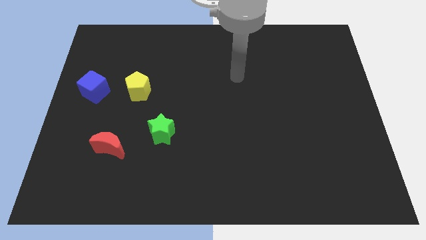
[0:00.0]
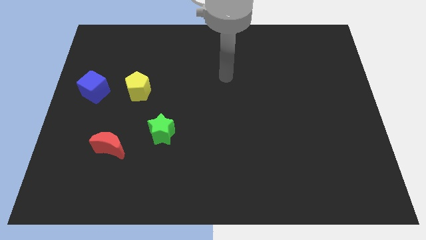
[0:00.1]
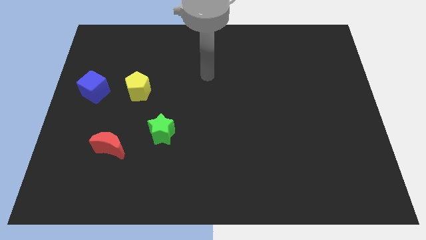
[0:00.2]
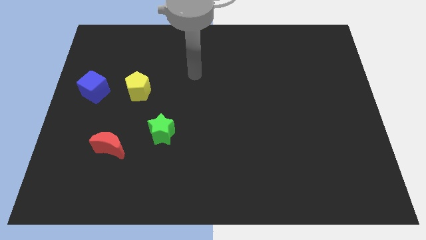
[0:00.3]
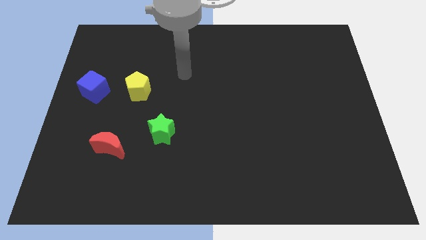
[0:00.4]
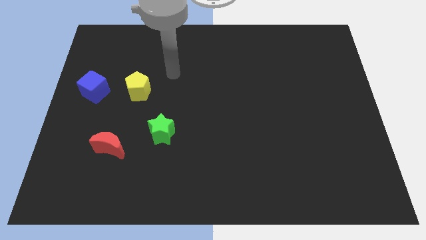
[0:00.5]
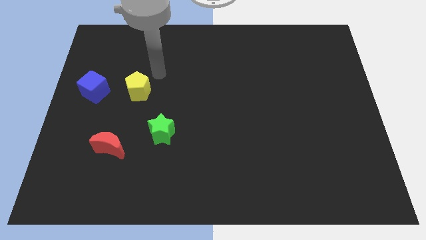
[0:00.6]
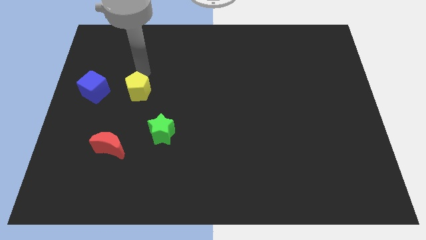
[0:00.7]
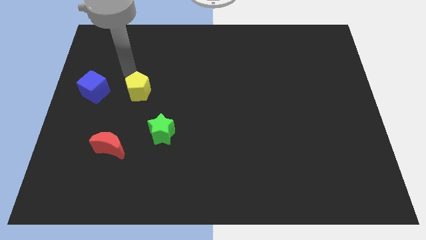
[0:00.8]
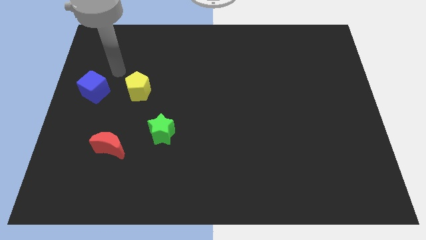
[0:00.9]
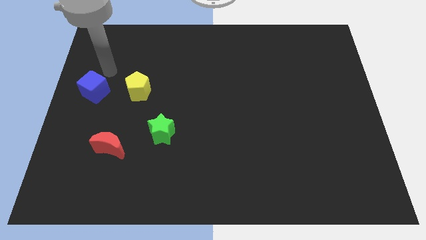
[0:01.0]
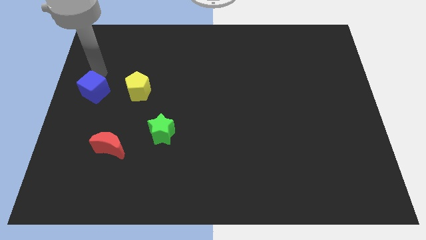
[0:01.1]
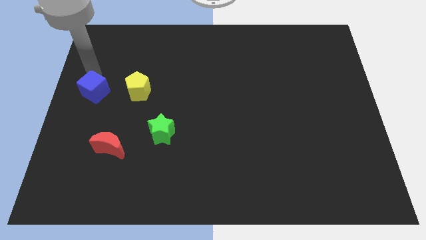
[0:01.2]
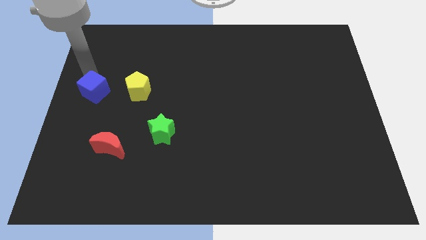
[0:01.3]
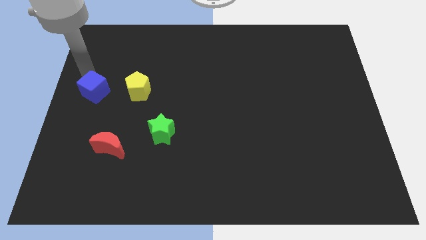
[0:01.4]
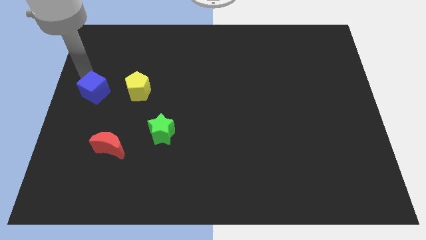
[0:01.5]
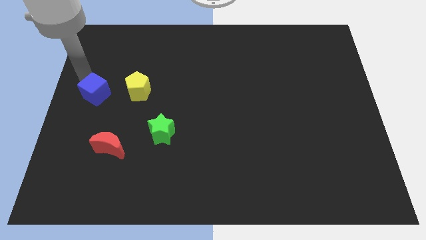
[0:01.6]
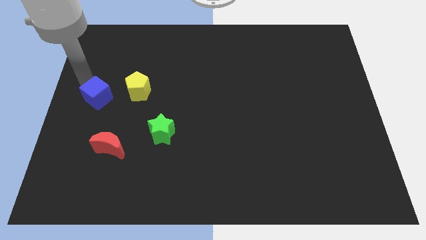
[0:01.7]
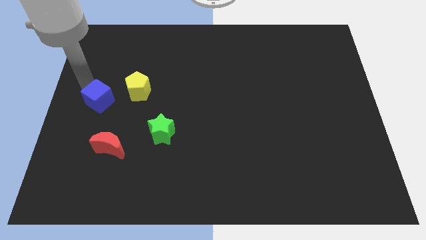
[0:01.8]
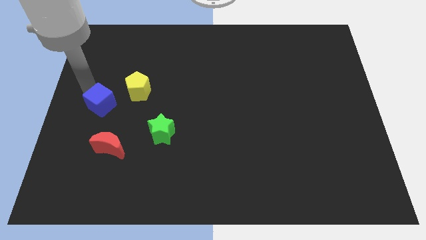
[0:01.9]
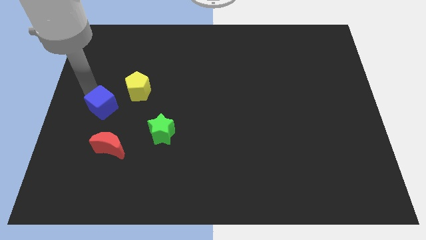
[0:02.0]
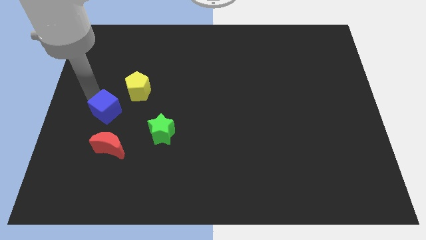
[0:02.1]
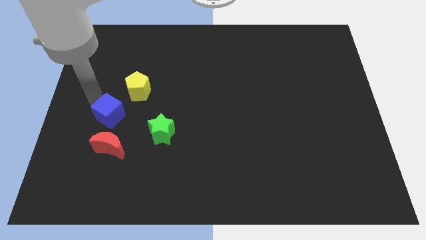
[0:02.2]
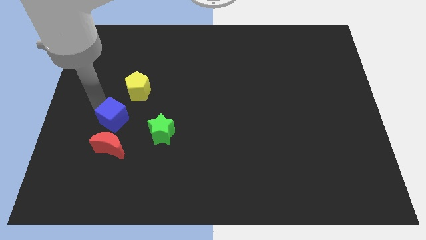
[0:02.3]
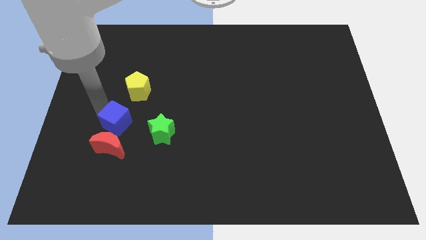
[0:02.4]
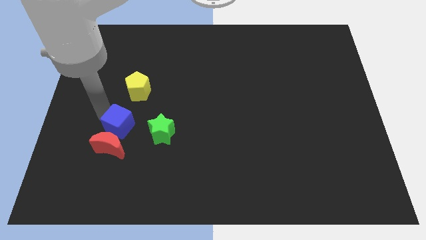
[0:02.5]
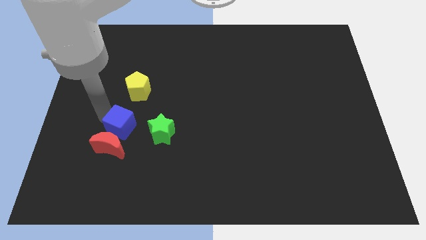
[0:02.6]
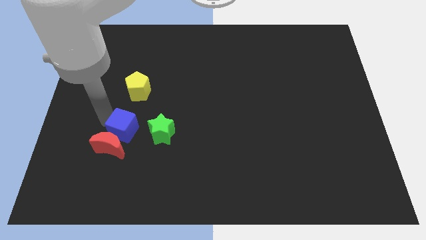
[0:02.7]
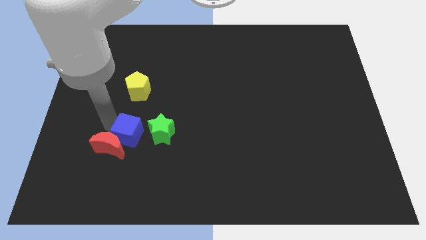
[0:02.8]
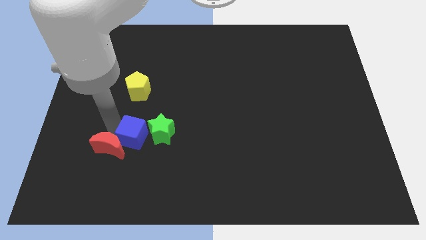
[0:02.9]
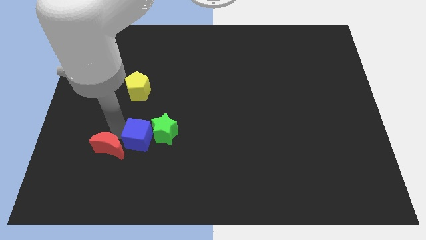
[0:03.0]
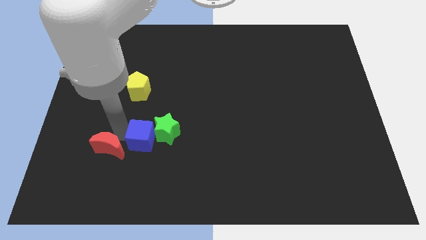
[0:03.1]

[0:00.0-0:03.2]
push the blue block close to the star

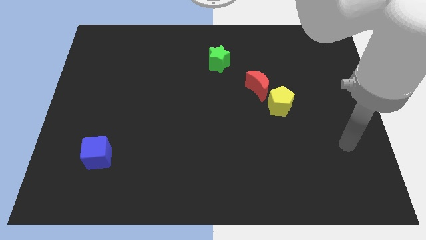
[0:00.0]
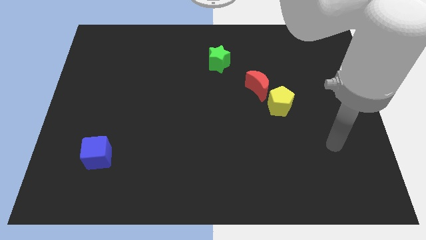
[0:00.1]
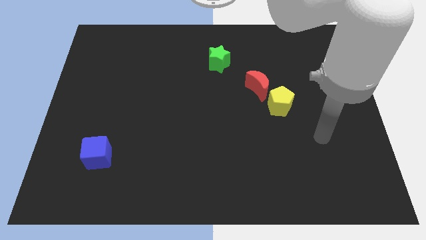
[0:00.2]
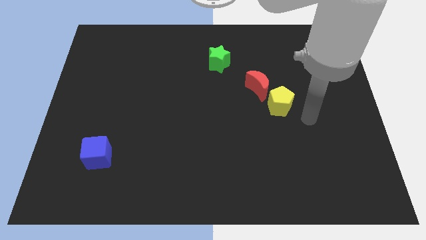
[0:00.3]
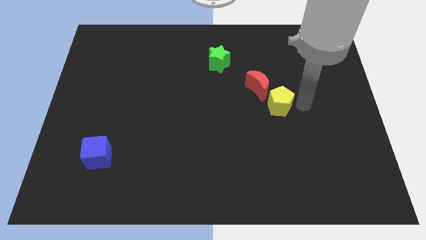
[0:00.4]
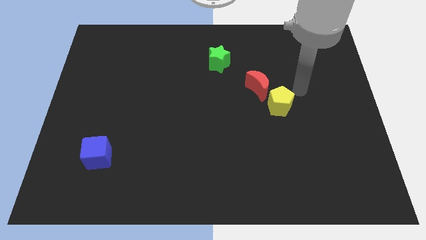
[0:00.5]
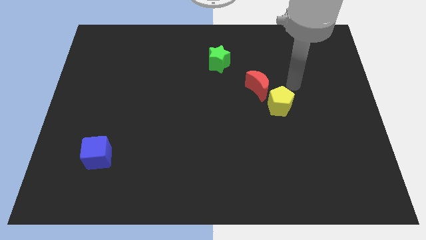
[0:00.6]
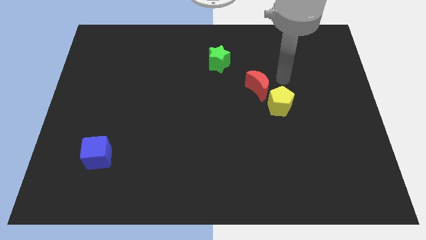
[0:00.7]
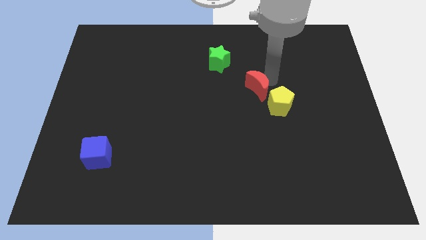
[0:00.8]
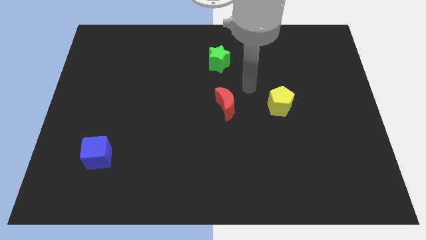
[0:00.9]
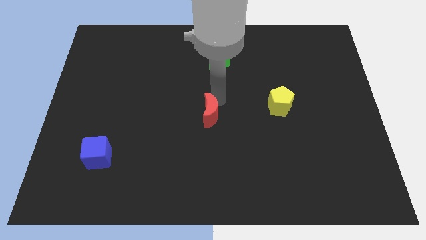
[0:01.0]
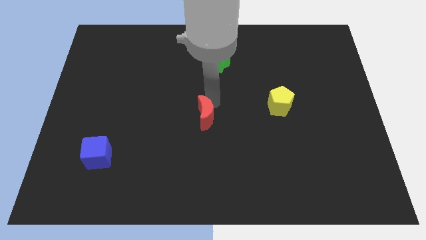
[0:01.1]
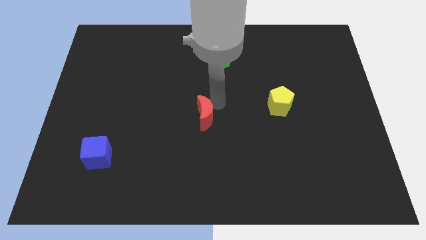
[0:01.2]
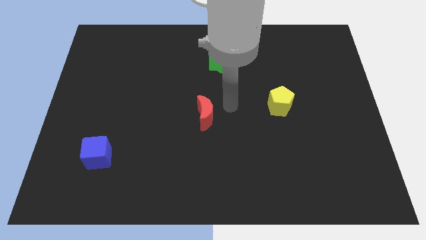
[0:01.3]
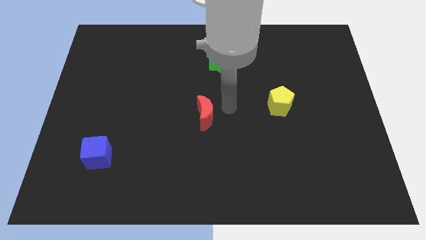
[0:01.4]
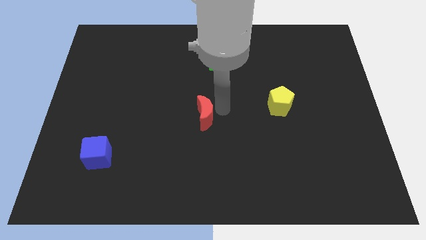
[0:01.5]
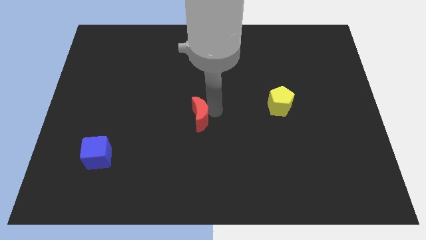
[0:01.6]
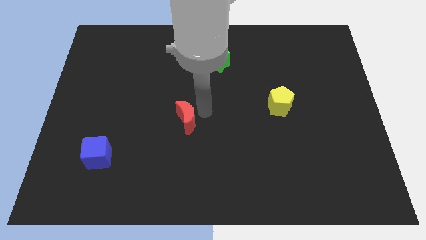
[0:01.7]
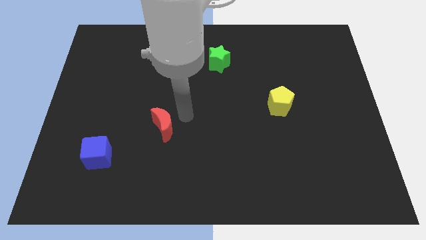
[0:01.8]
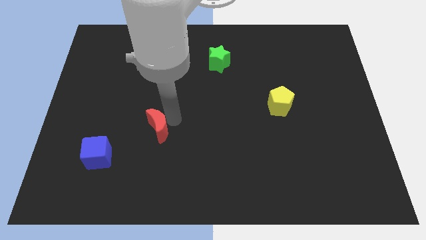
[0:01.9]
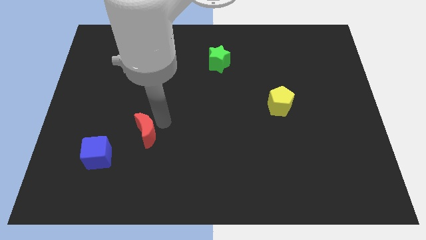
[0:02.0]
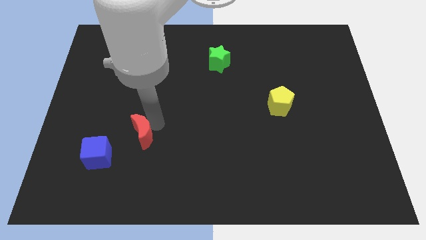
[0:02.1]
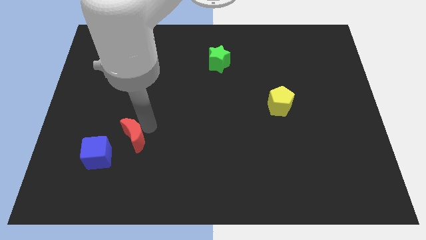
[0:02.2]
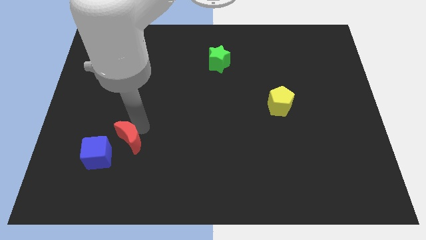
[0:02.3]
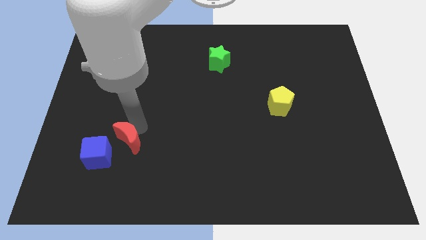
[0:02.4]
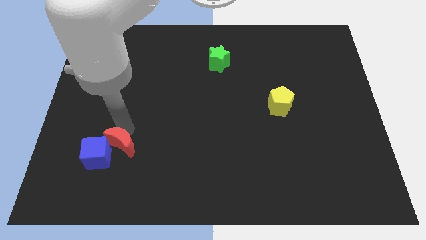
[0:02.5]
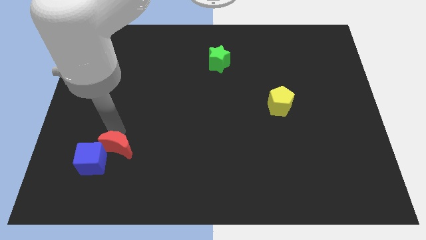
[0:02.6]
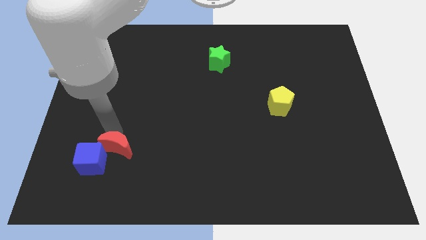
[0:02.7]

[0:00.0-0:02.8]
move the red block next to the blue cube

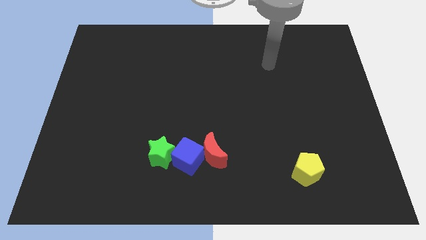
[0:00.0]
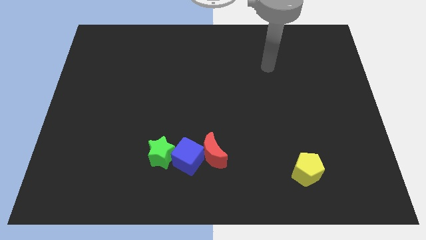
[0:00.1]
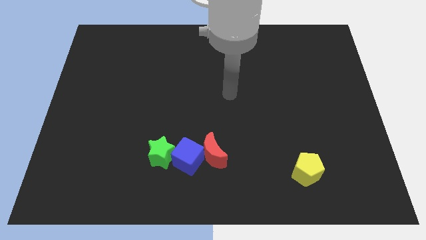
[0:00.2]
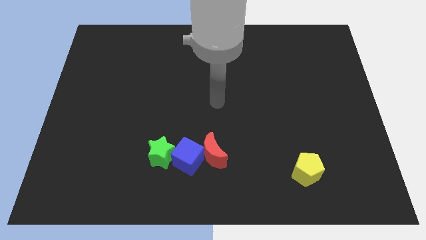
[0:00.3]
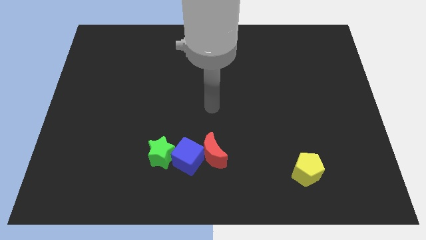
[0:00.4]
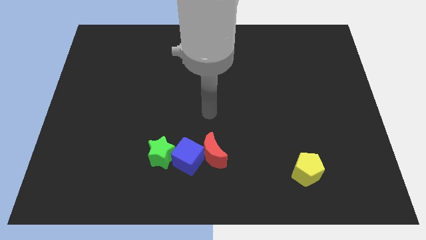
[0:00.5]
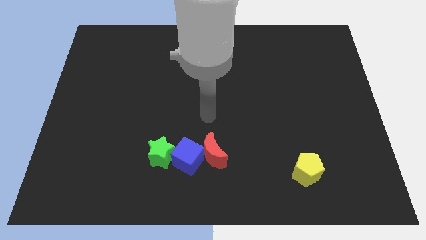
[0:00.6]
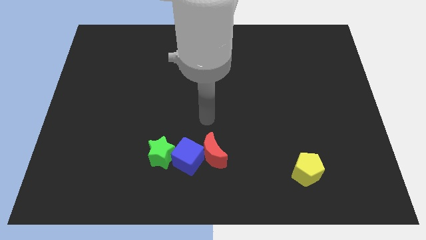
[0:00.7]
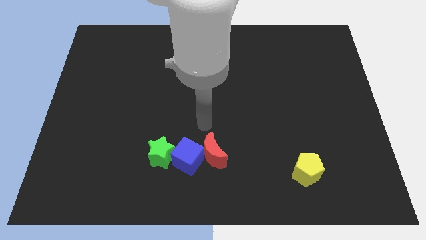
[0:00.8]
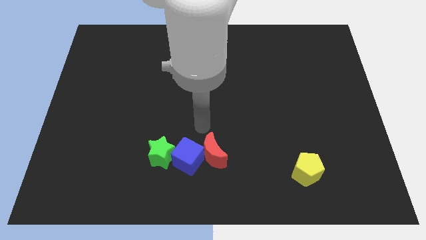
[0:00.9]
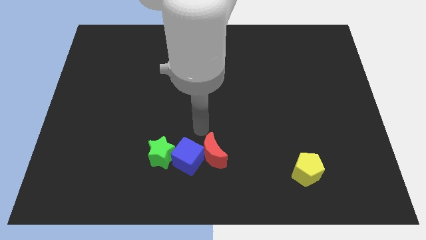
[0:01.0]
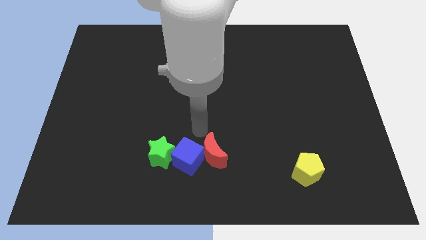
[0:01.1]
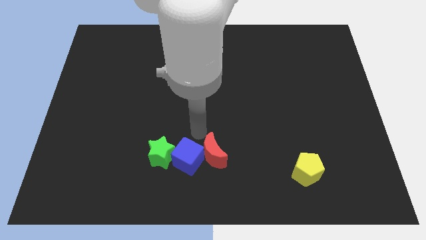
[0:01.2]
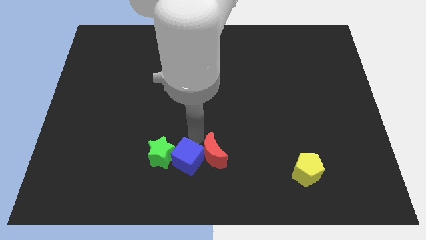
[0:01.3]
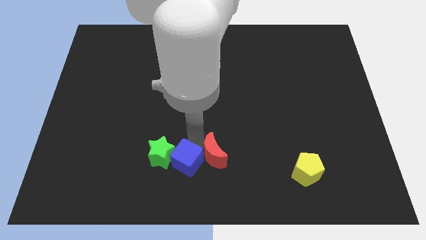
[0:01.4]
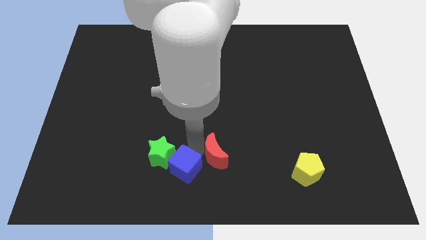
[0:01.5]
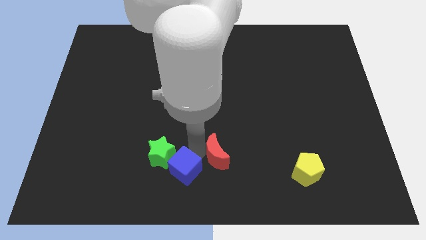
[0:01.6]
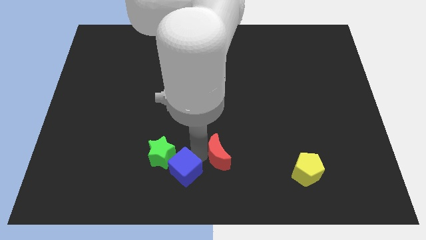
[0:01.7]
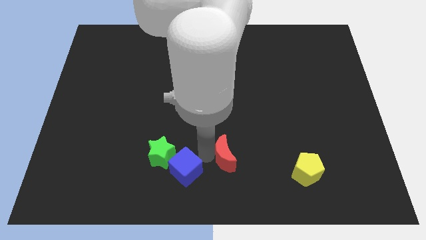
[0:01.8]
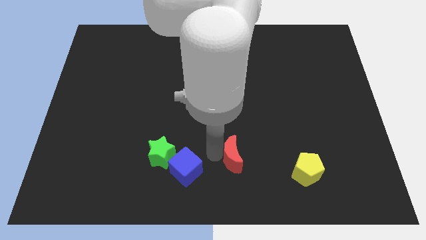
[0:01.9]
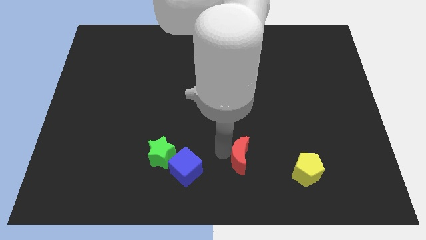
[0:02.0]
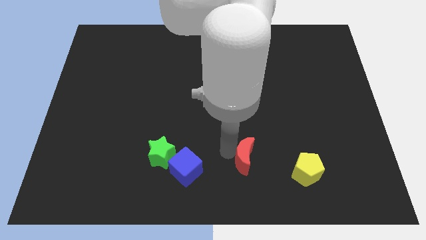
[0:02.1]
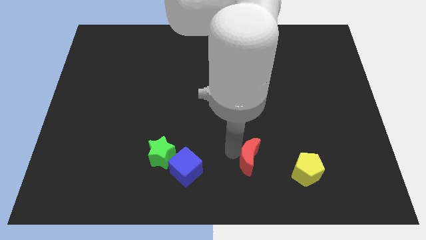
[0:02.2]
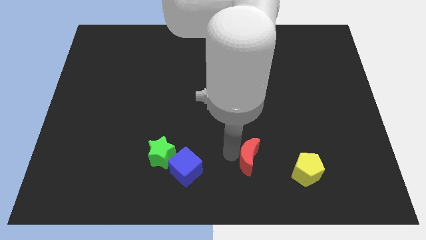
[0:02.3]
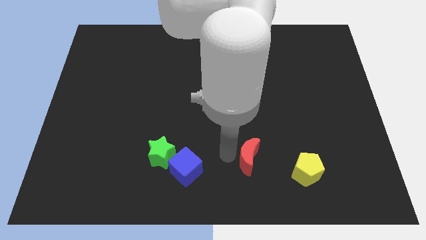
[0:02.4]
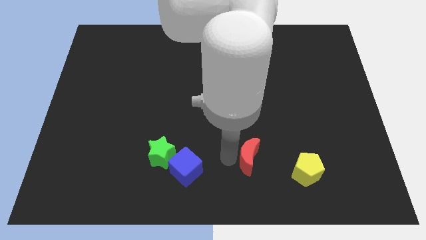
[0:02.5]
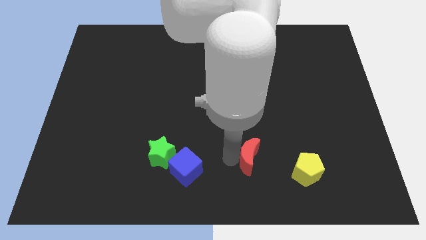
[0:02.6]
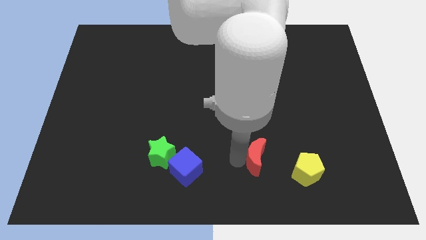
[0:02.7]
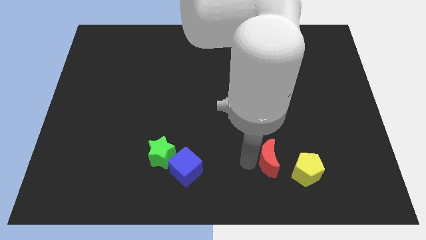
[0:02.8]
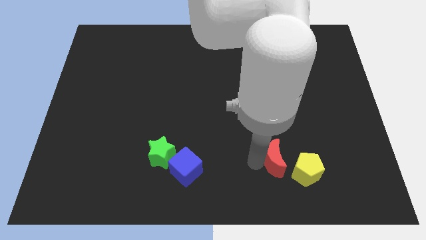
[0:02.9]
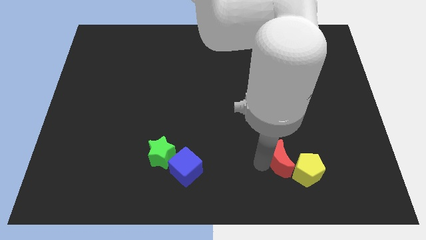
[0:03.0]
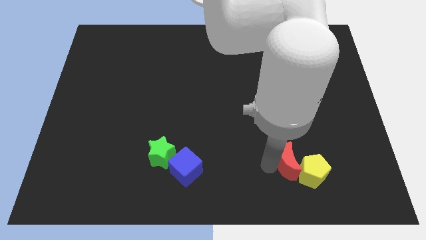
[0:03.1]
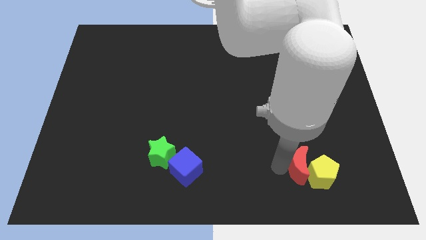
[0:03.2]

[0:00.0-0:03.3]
put the red block to the pentagon
